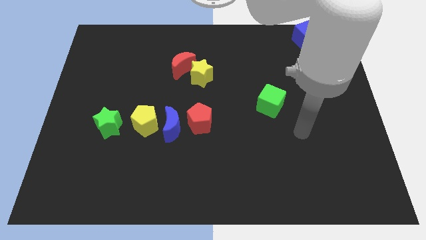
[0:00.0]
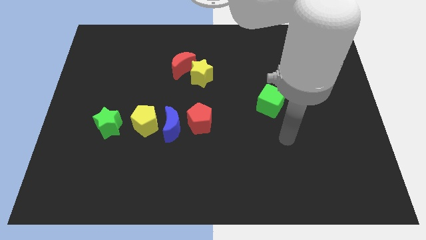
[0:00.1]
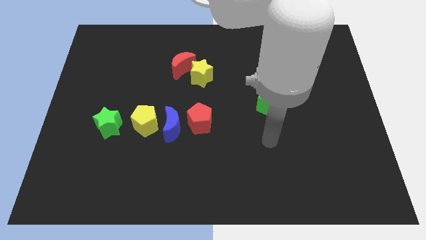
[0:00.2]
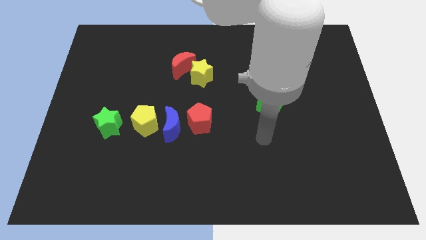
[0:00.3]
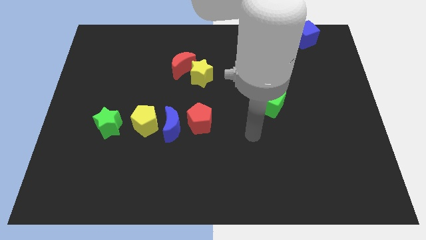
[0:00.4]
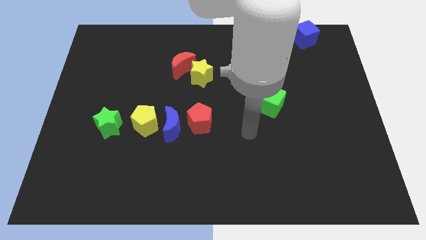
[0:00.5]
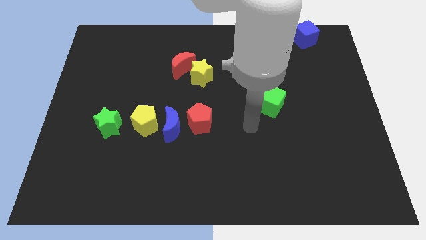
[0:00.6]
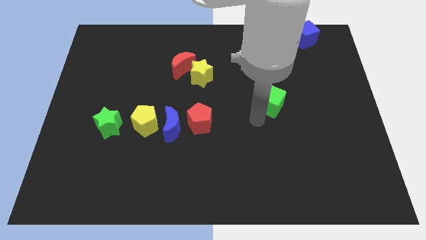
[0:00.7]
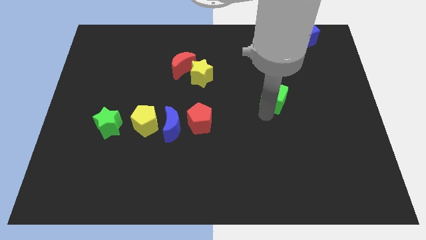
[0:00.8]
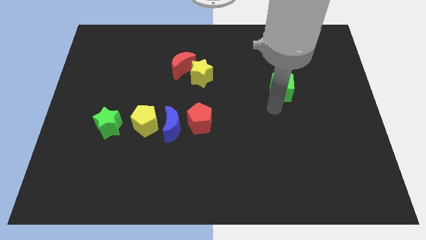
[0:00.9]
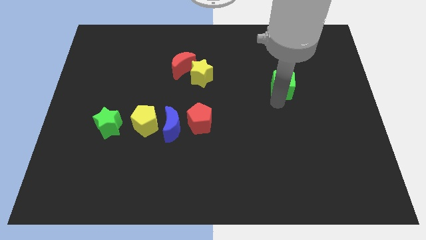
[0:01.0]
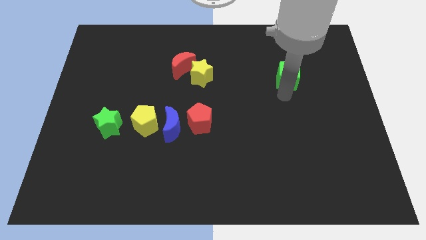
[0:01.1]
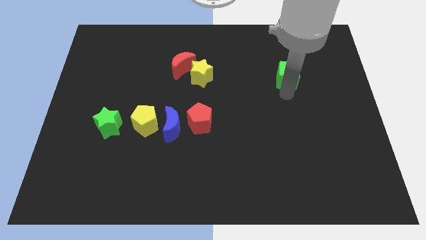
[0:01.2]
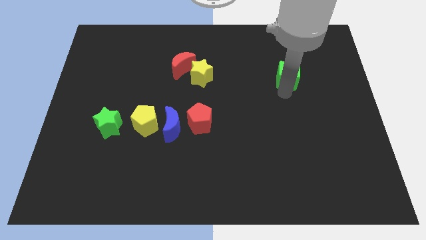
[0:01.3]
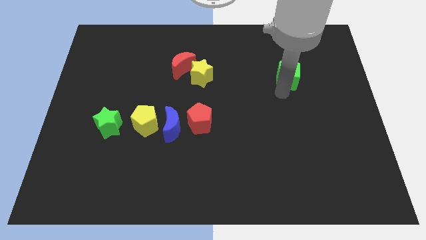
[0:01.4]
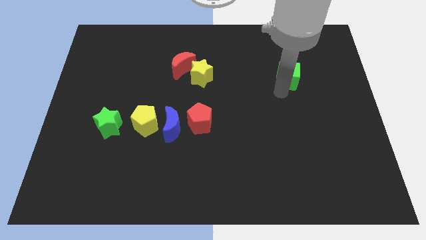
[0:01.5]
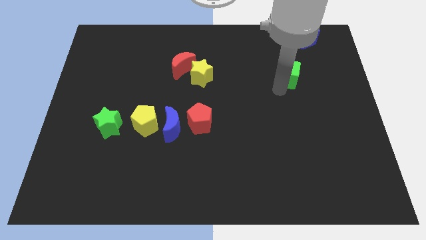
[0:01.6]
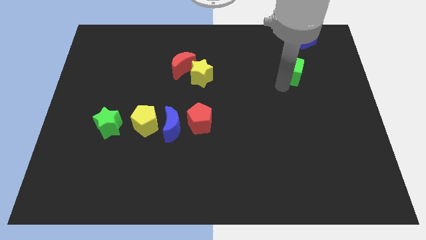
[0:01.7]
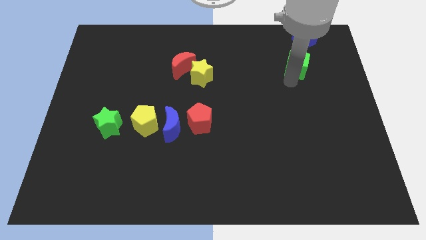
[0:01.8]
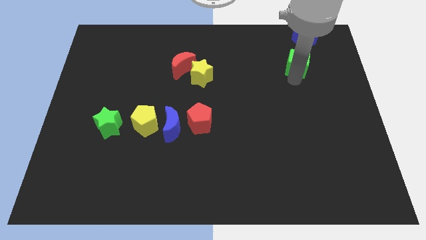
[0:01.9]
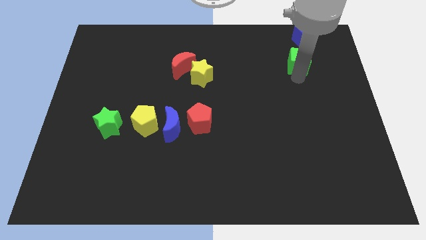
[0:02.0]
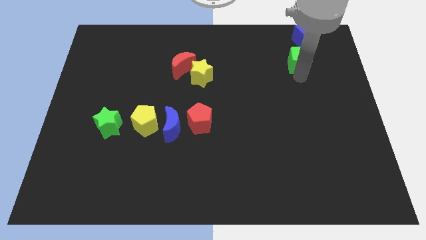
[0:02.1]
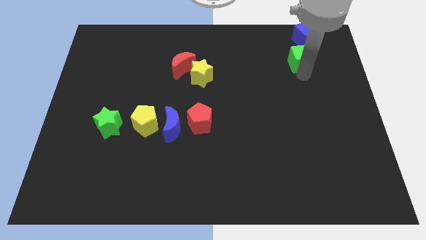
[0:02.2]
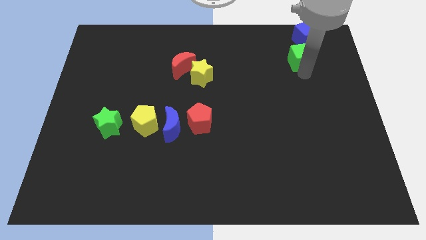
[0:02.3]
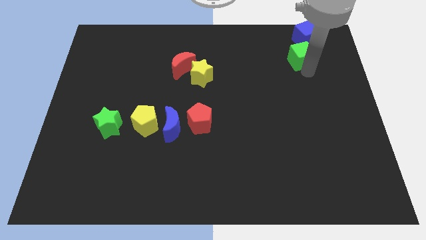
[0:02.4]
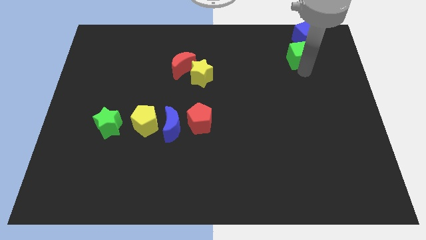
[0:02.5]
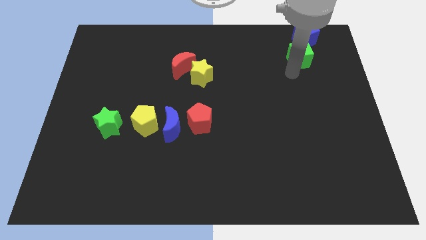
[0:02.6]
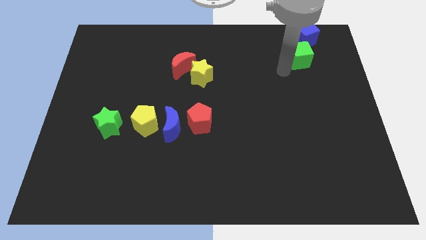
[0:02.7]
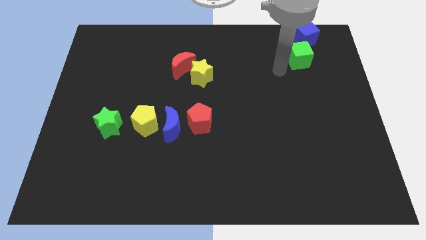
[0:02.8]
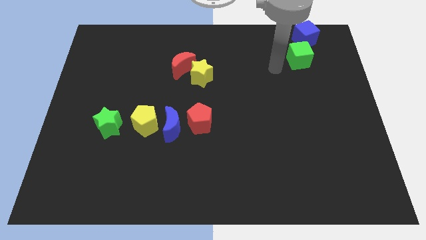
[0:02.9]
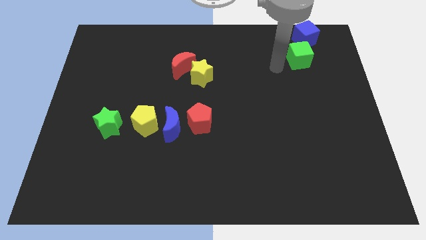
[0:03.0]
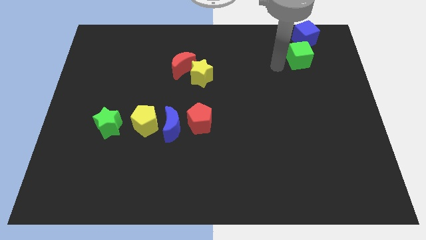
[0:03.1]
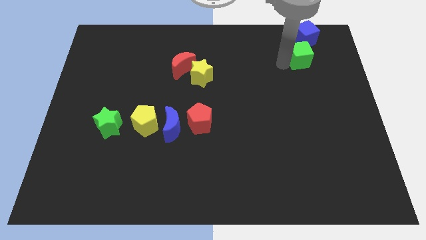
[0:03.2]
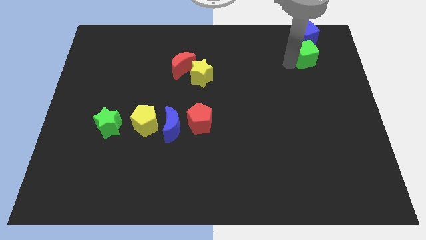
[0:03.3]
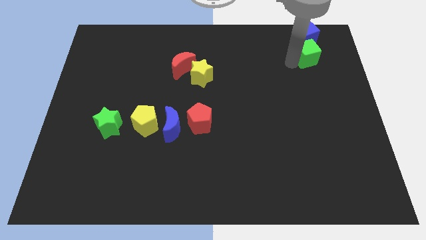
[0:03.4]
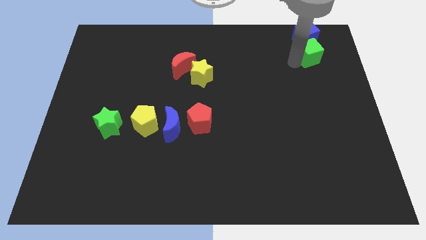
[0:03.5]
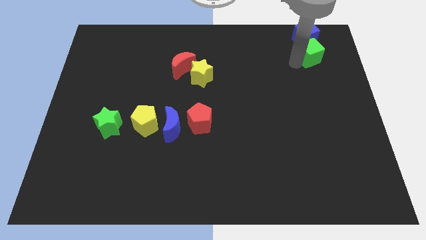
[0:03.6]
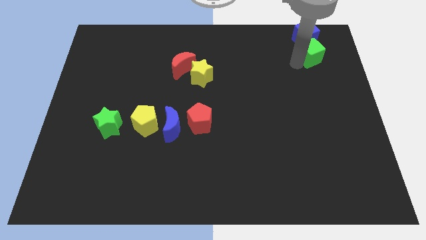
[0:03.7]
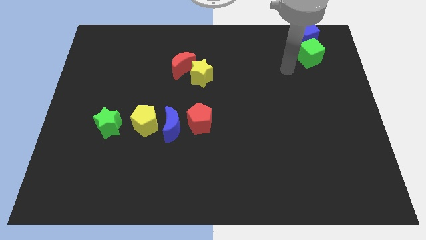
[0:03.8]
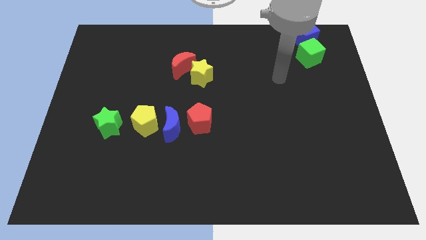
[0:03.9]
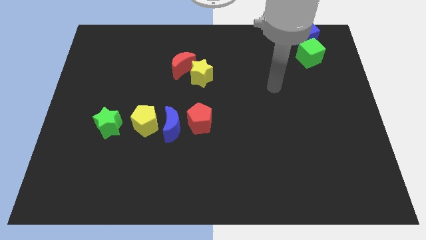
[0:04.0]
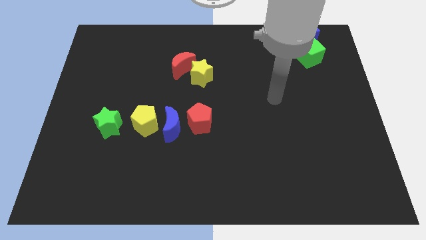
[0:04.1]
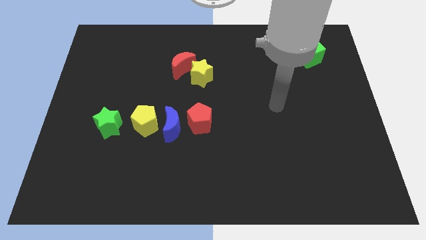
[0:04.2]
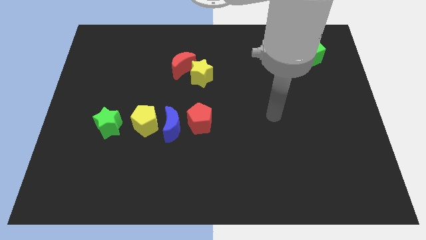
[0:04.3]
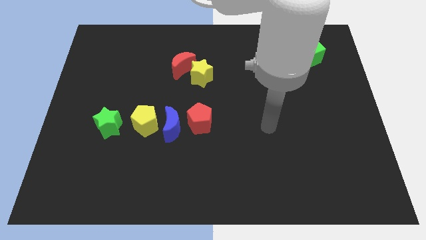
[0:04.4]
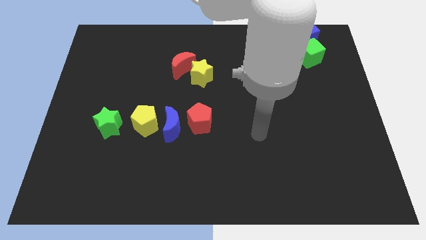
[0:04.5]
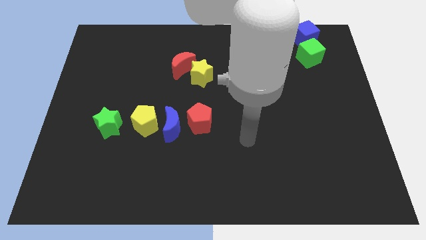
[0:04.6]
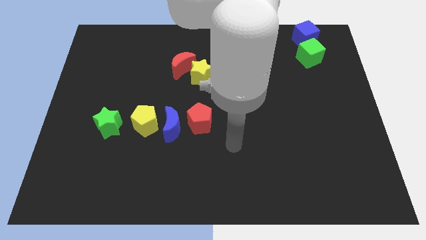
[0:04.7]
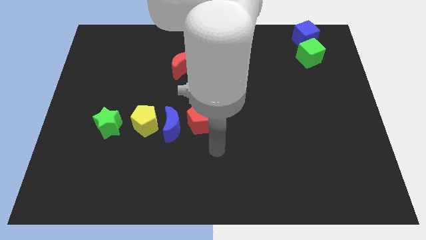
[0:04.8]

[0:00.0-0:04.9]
place the green cube below the green cube

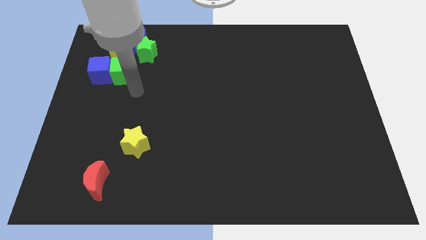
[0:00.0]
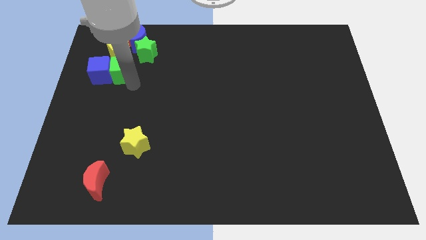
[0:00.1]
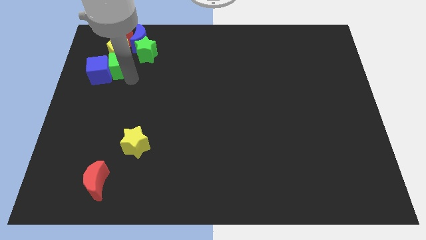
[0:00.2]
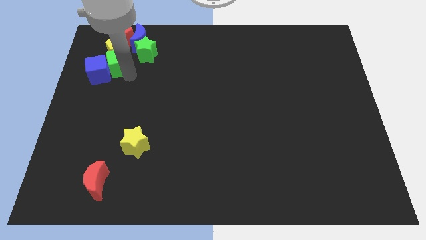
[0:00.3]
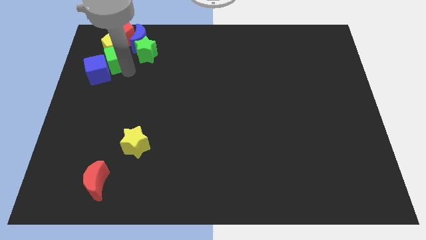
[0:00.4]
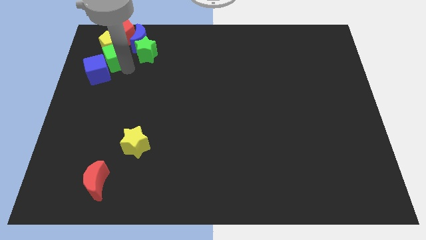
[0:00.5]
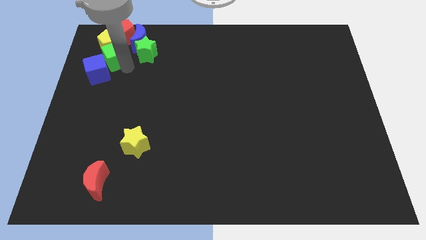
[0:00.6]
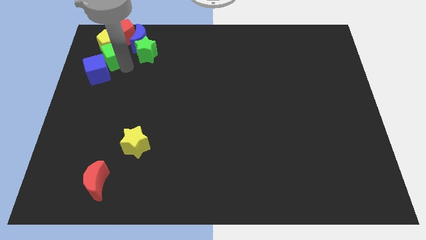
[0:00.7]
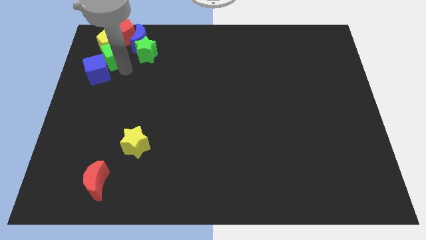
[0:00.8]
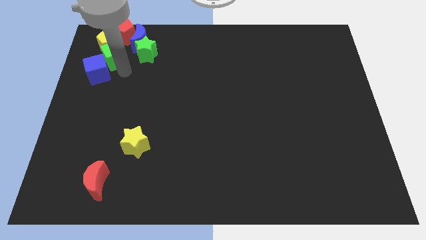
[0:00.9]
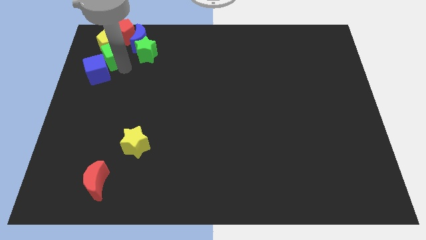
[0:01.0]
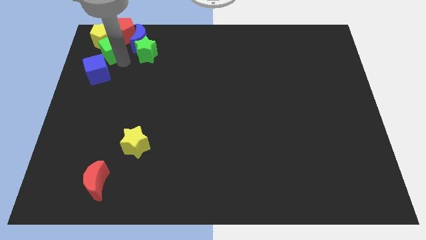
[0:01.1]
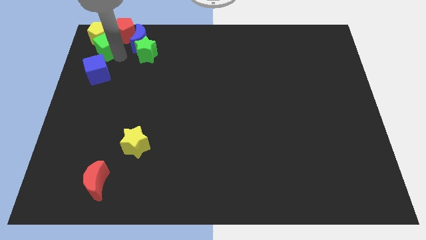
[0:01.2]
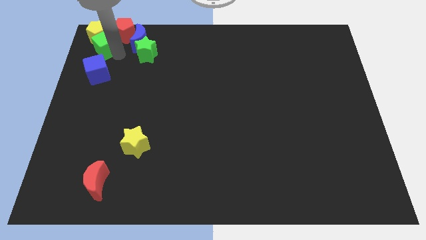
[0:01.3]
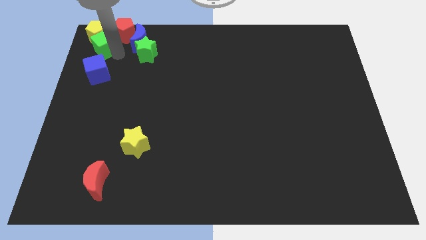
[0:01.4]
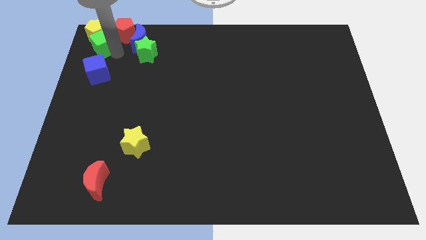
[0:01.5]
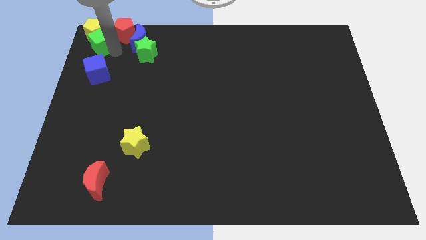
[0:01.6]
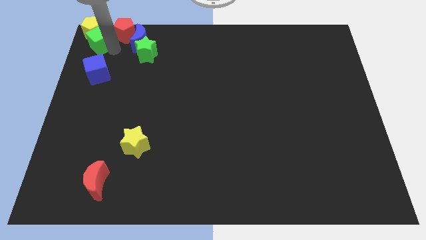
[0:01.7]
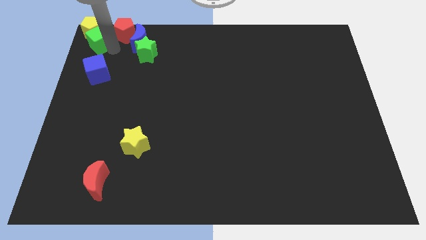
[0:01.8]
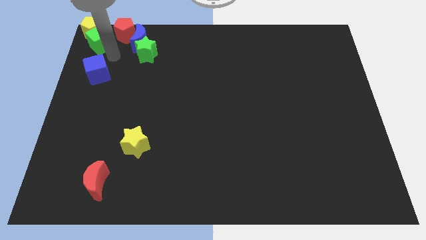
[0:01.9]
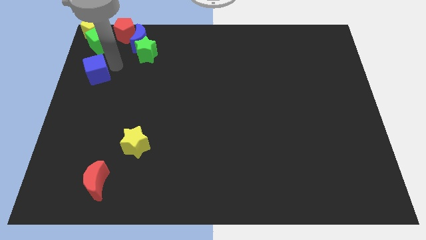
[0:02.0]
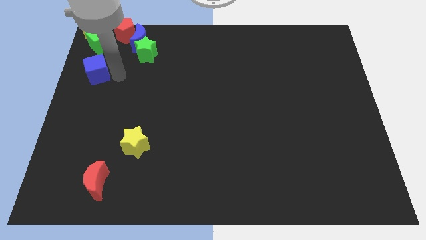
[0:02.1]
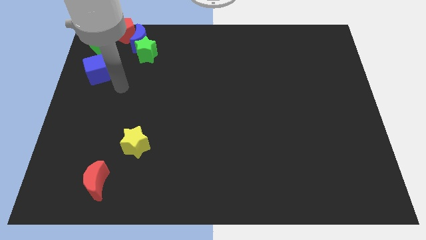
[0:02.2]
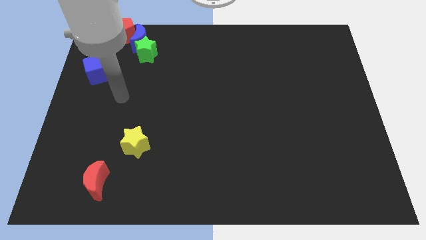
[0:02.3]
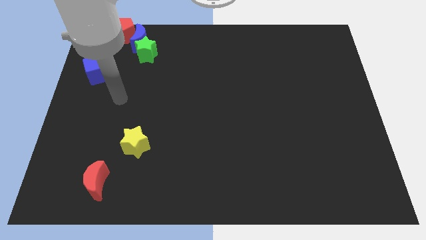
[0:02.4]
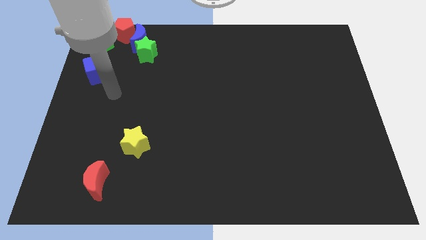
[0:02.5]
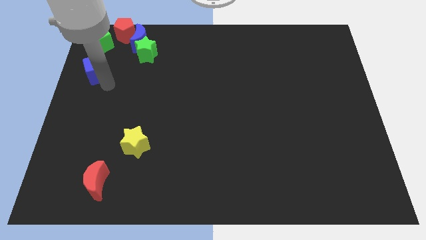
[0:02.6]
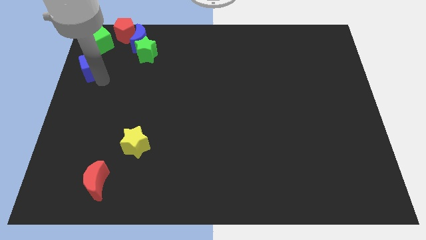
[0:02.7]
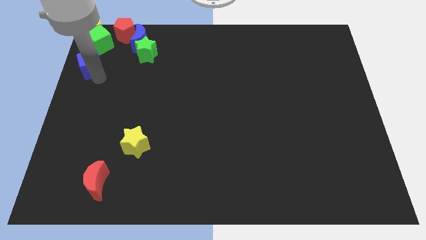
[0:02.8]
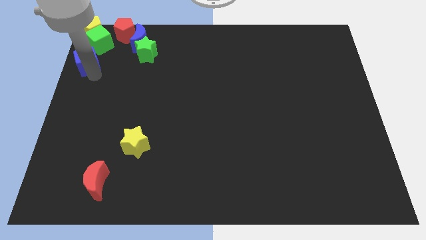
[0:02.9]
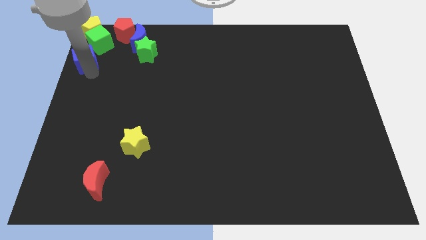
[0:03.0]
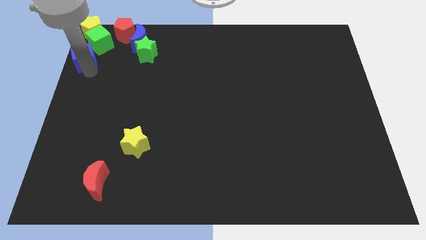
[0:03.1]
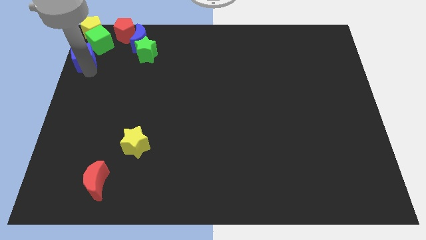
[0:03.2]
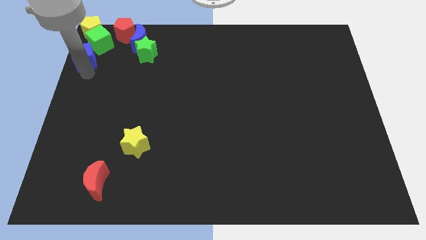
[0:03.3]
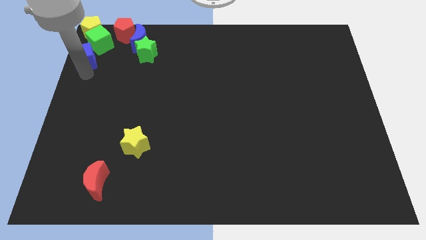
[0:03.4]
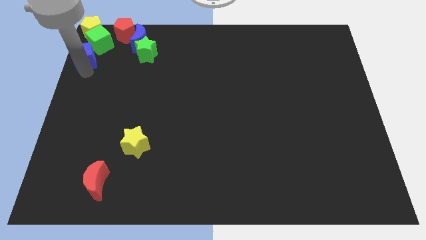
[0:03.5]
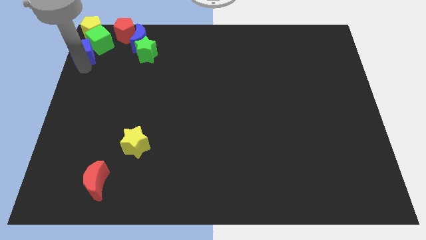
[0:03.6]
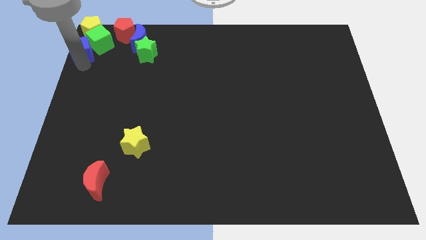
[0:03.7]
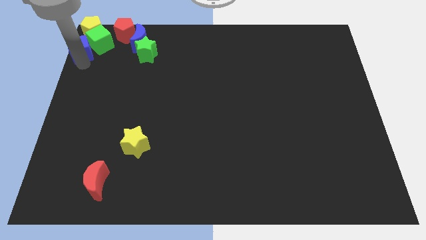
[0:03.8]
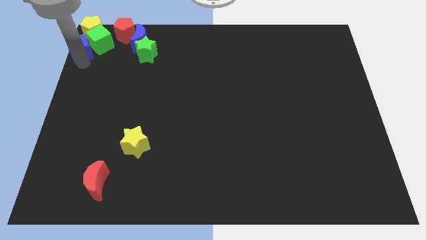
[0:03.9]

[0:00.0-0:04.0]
push blue cube beside green cube
